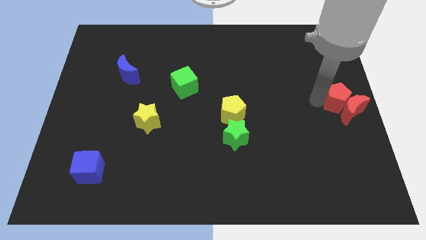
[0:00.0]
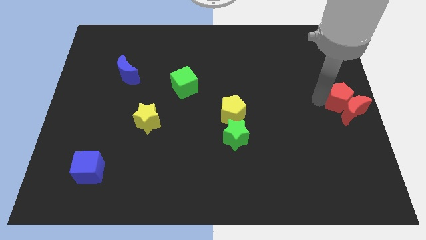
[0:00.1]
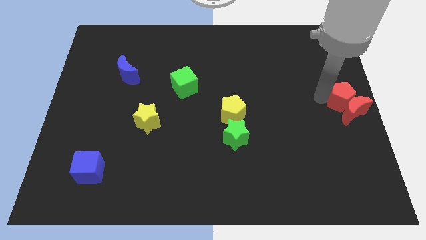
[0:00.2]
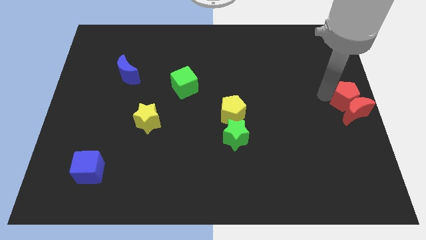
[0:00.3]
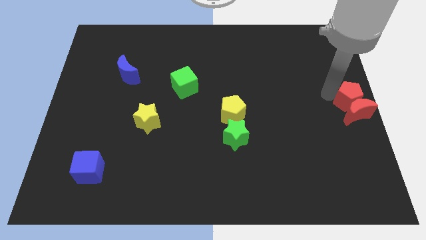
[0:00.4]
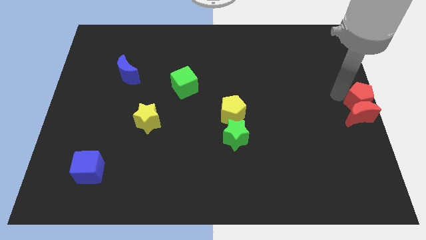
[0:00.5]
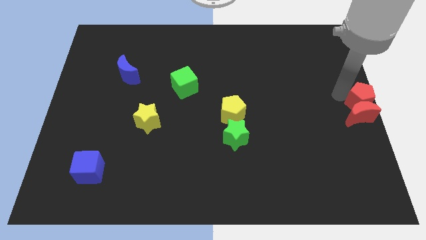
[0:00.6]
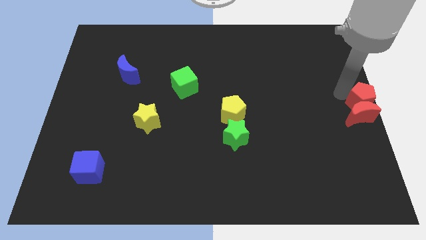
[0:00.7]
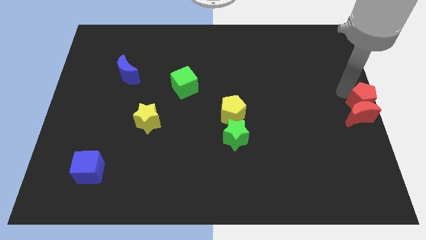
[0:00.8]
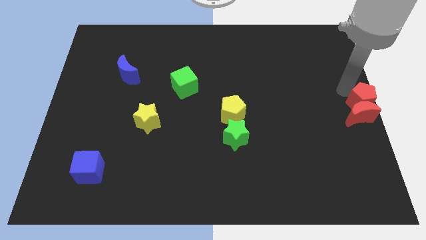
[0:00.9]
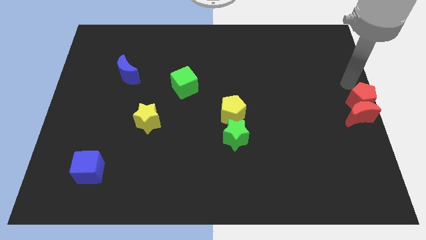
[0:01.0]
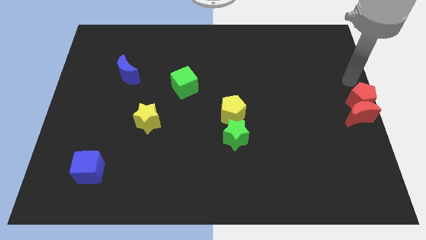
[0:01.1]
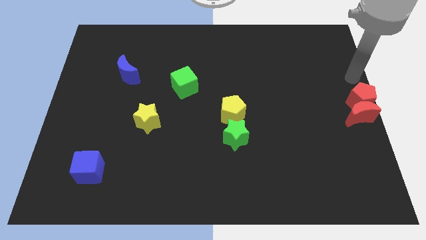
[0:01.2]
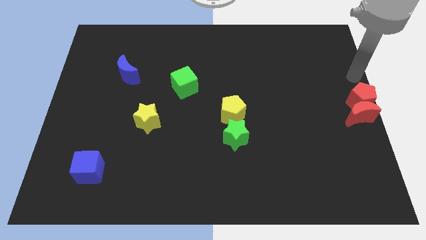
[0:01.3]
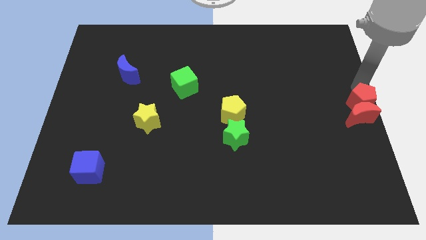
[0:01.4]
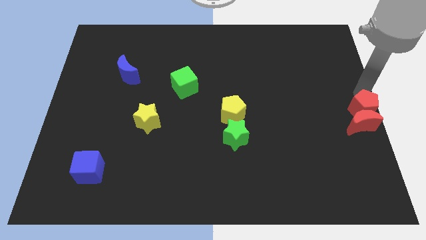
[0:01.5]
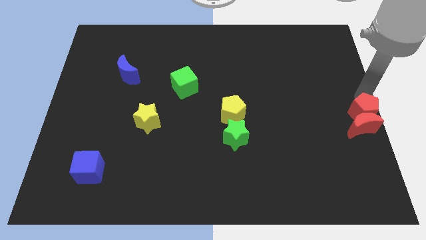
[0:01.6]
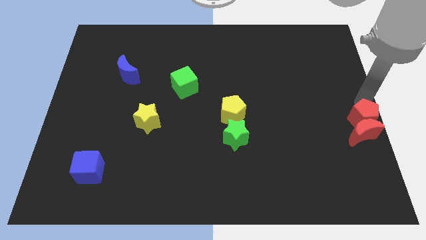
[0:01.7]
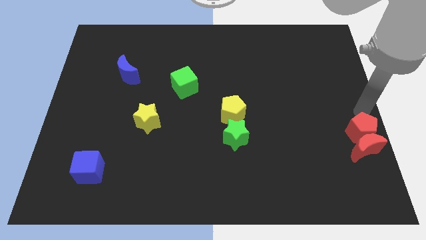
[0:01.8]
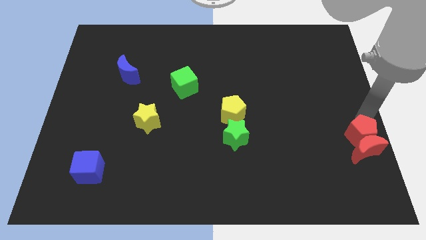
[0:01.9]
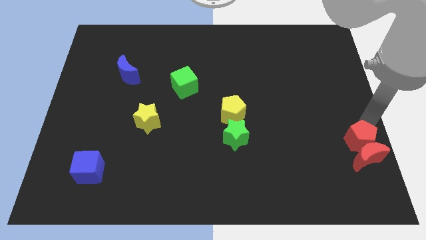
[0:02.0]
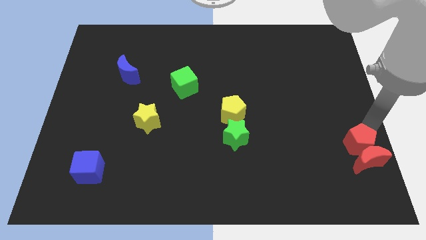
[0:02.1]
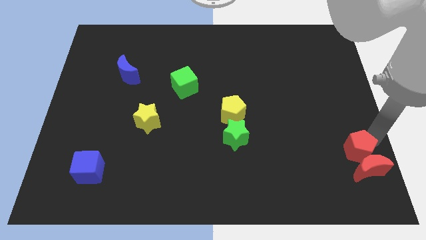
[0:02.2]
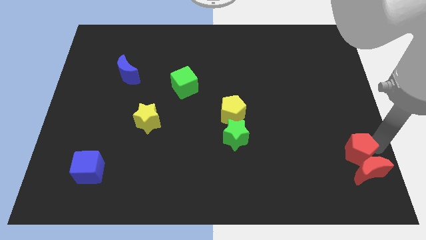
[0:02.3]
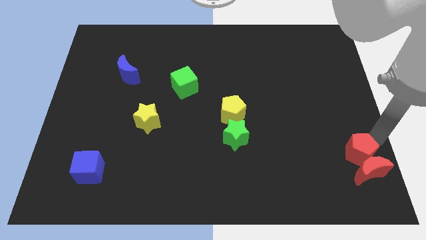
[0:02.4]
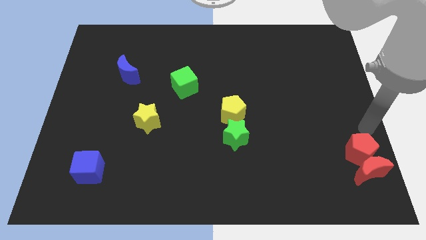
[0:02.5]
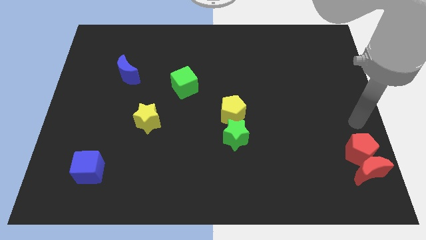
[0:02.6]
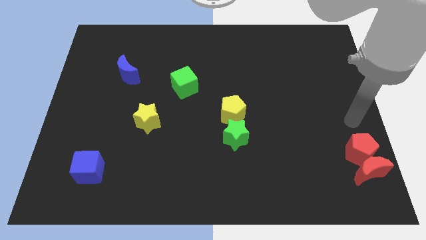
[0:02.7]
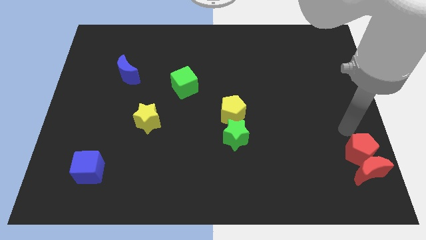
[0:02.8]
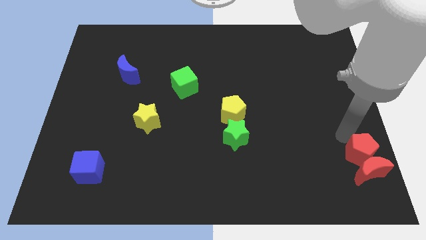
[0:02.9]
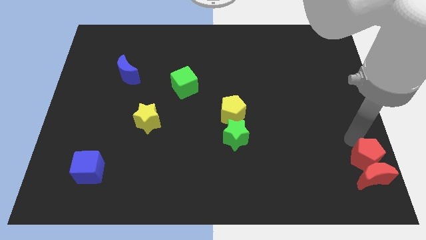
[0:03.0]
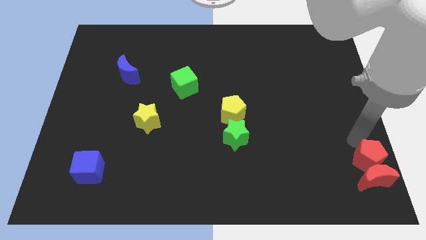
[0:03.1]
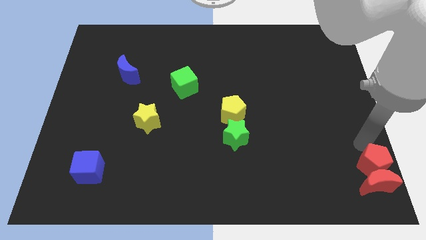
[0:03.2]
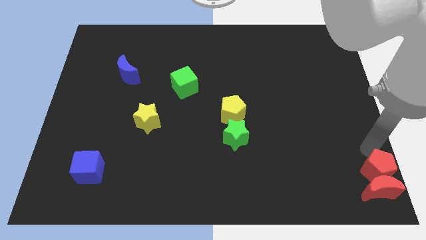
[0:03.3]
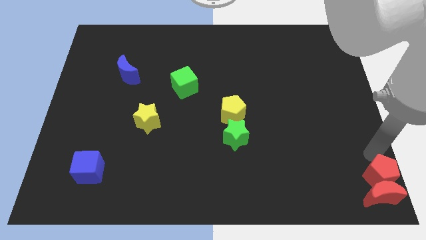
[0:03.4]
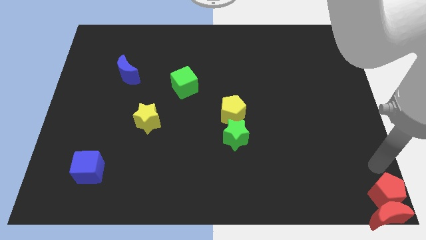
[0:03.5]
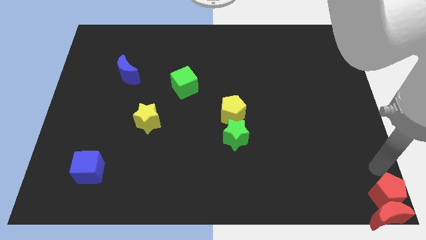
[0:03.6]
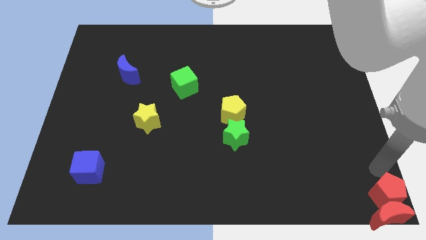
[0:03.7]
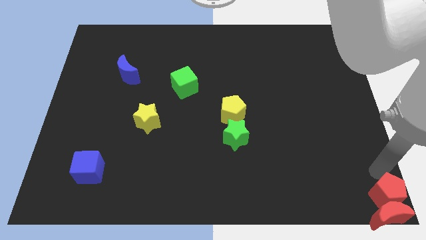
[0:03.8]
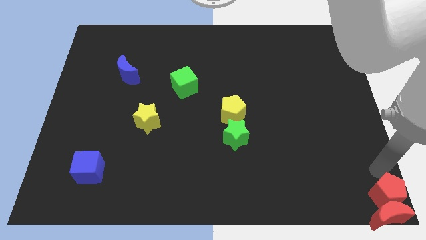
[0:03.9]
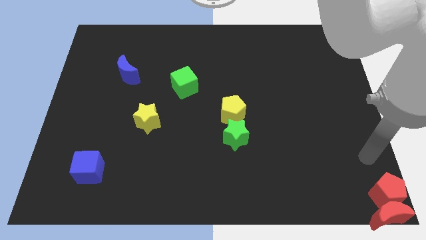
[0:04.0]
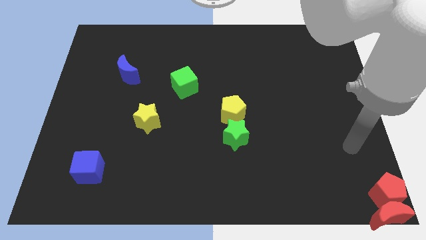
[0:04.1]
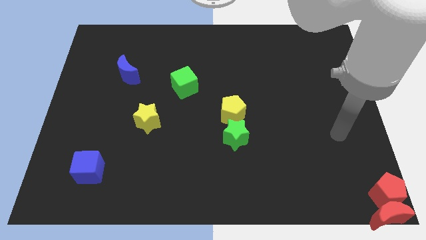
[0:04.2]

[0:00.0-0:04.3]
push the red crescent with red pentagon to the bottom right of the board

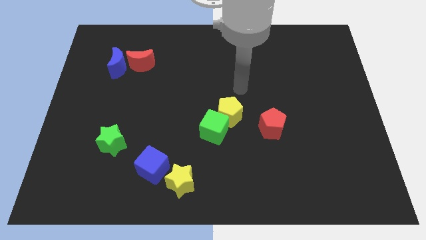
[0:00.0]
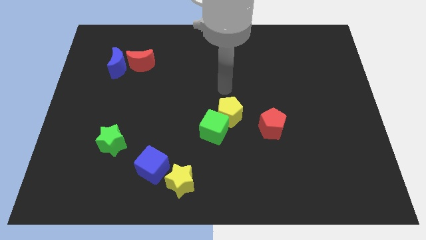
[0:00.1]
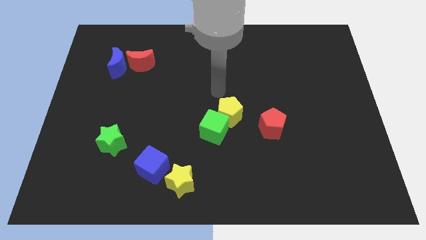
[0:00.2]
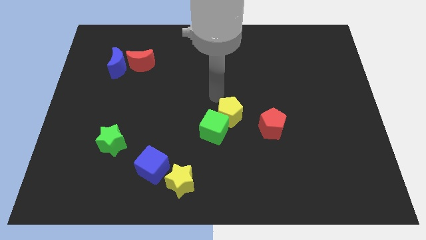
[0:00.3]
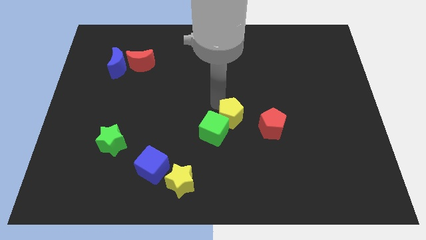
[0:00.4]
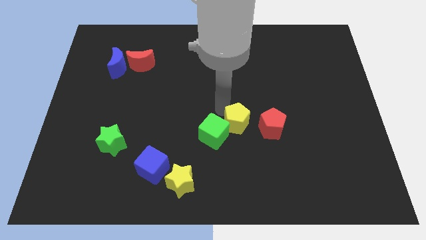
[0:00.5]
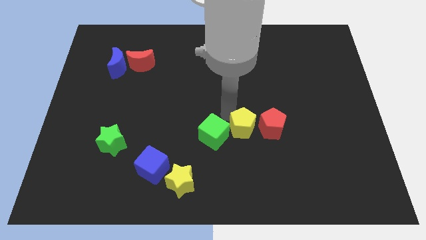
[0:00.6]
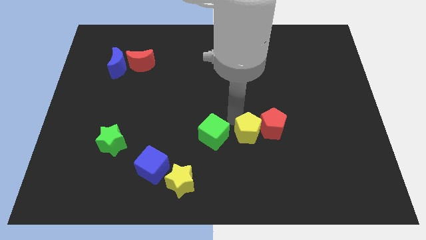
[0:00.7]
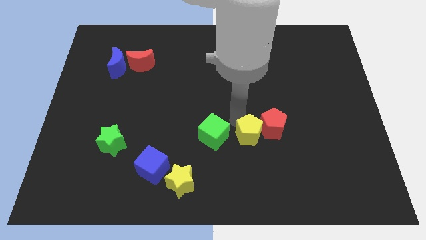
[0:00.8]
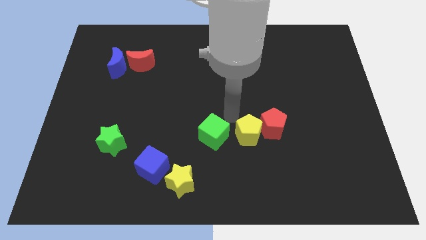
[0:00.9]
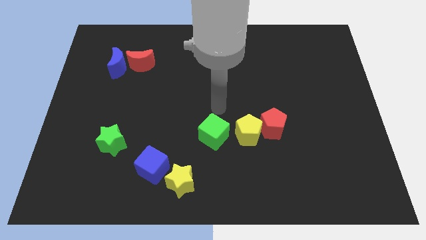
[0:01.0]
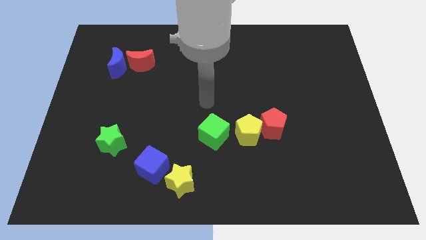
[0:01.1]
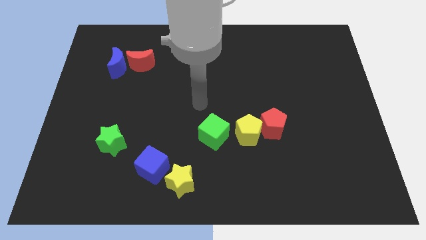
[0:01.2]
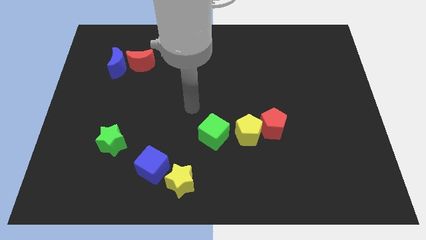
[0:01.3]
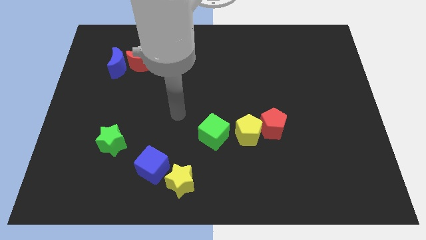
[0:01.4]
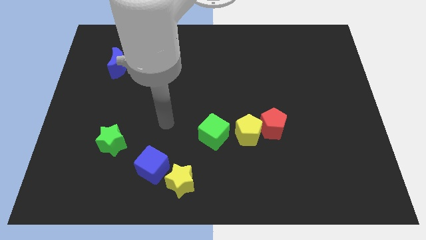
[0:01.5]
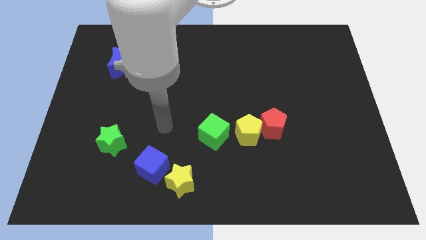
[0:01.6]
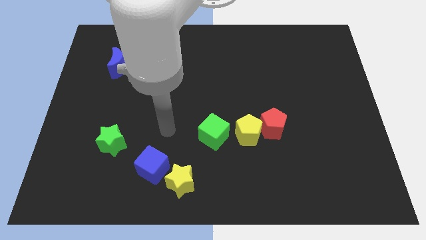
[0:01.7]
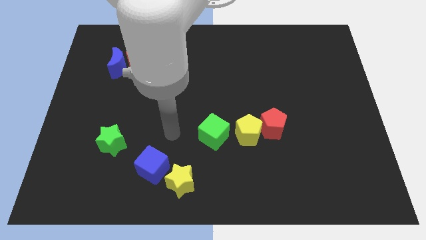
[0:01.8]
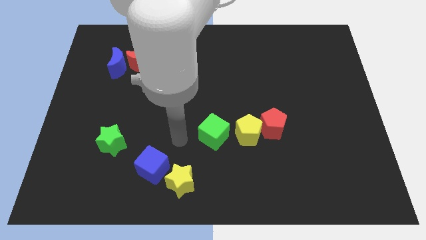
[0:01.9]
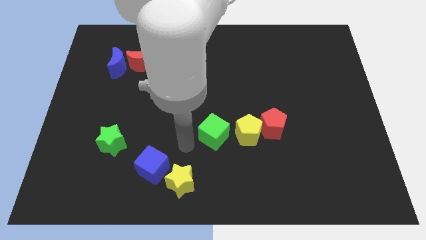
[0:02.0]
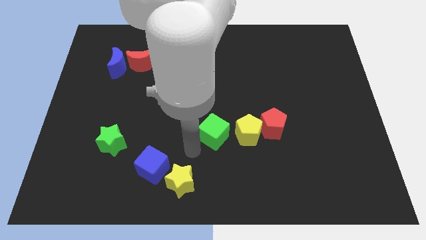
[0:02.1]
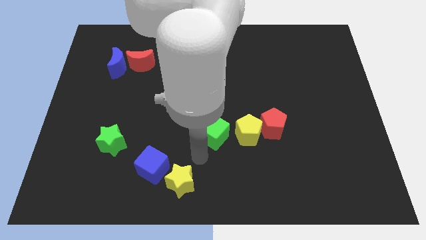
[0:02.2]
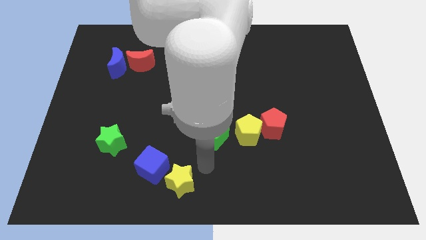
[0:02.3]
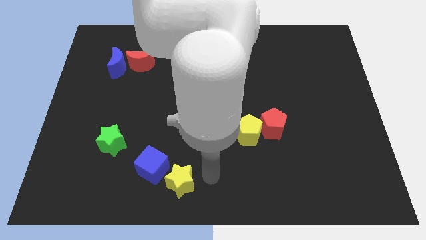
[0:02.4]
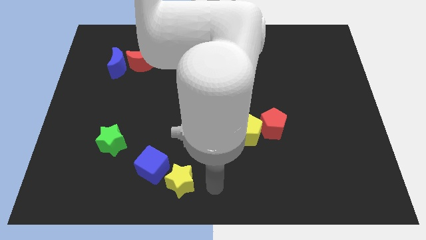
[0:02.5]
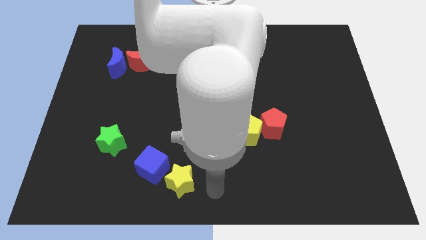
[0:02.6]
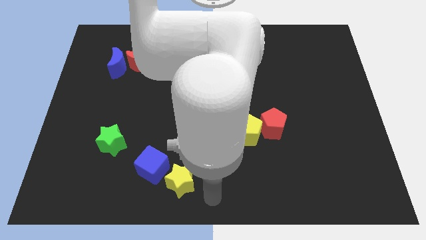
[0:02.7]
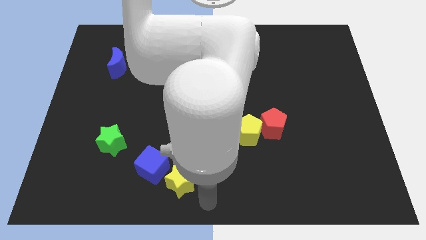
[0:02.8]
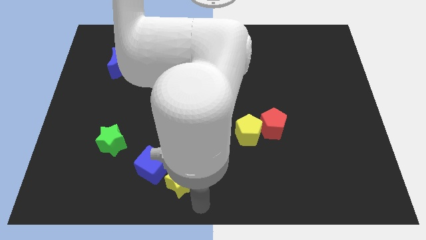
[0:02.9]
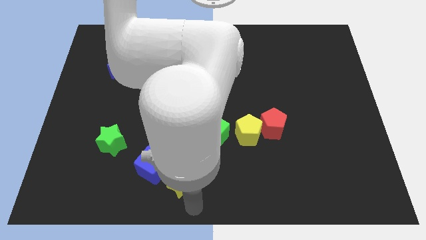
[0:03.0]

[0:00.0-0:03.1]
push the yellow pentagon in between red pentagon and green cube

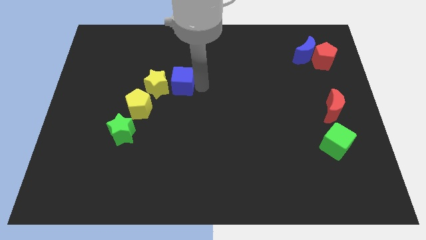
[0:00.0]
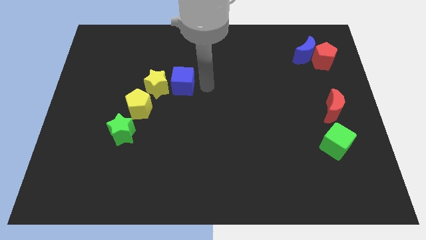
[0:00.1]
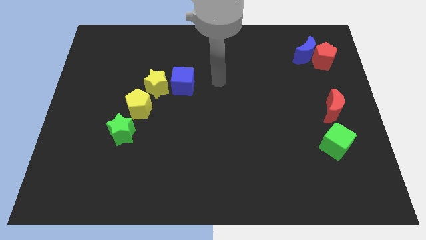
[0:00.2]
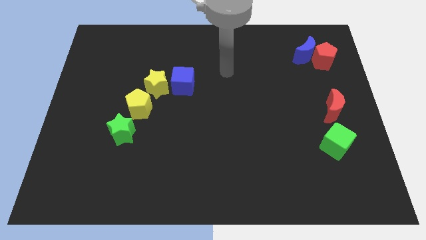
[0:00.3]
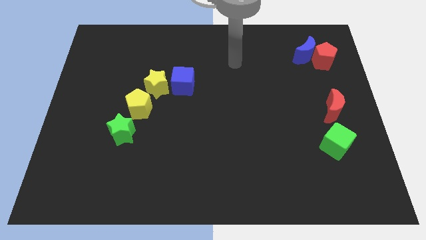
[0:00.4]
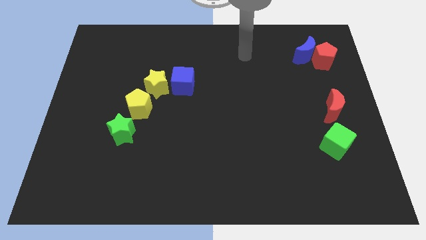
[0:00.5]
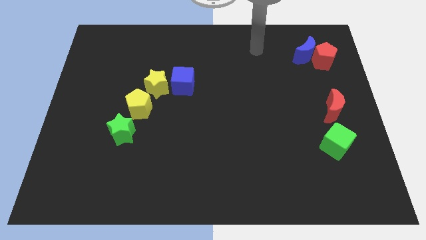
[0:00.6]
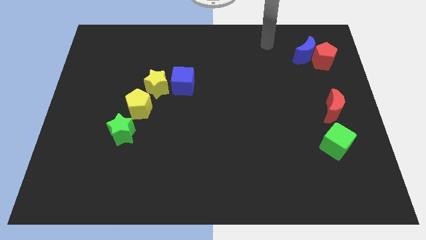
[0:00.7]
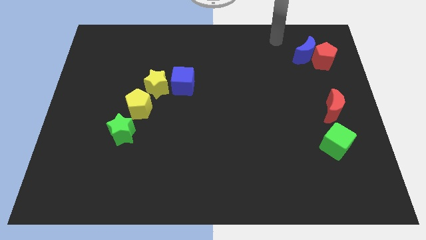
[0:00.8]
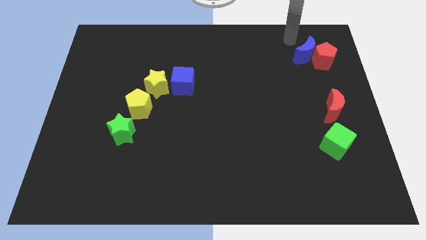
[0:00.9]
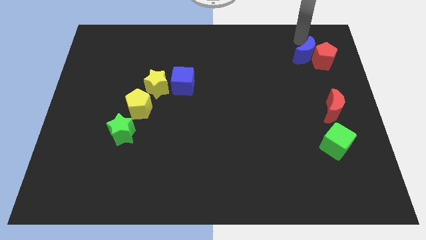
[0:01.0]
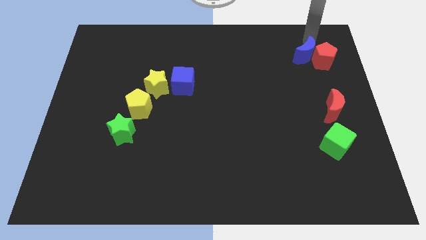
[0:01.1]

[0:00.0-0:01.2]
place your hand above blue crescent

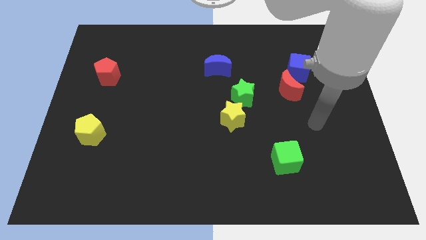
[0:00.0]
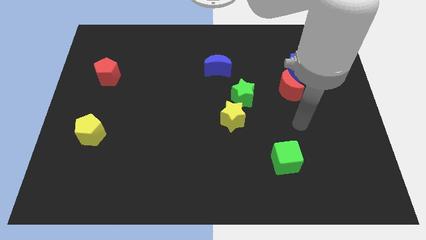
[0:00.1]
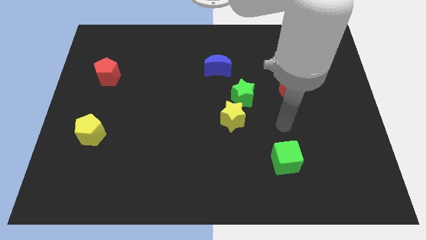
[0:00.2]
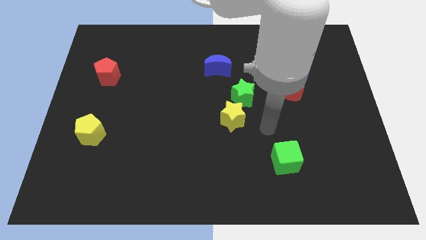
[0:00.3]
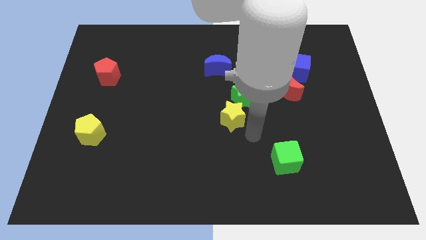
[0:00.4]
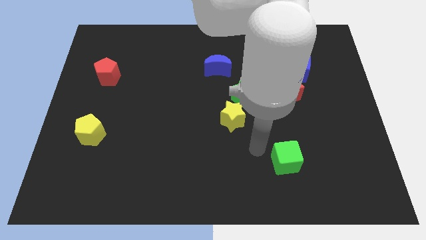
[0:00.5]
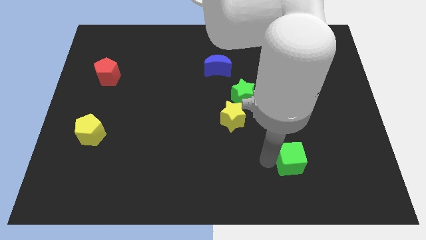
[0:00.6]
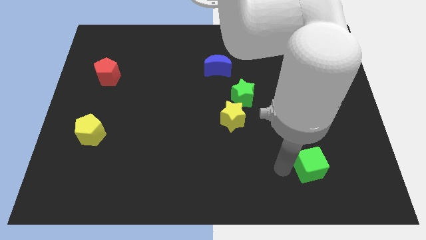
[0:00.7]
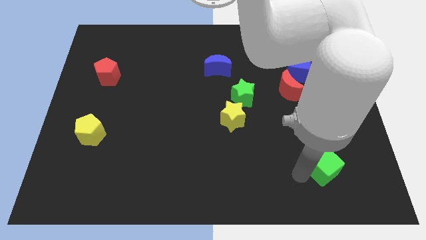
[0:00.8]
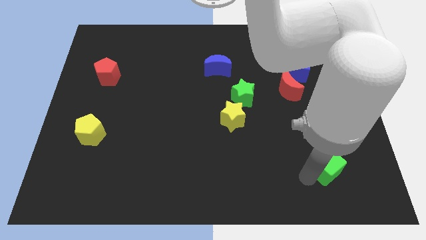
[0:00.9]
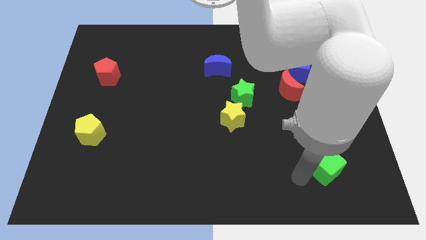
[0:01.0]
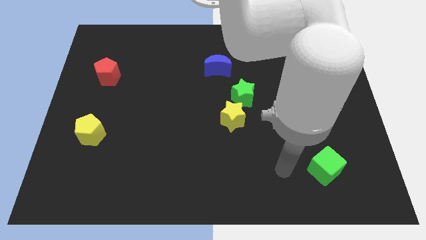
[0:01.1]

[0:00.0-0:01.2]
push the green cube towards the bottom right side of the board
